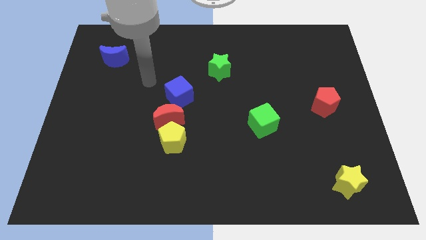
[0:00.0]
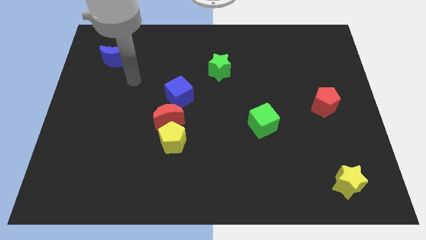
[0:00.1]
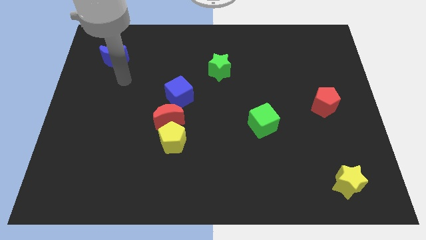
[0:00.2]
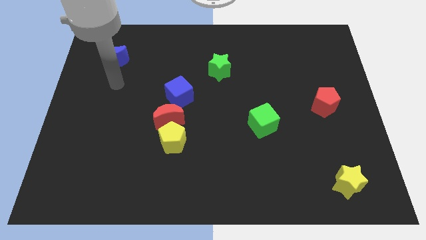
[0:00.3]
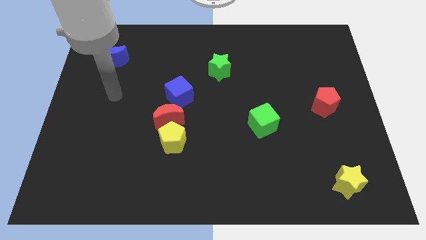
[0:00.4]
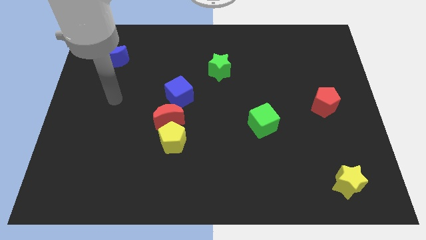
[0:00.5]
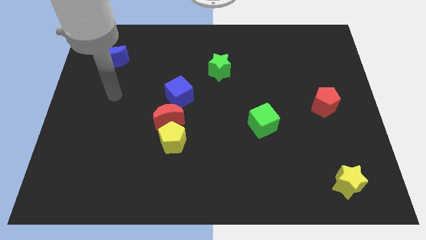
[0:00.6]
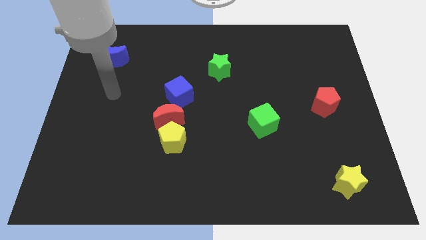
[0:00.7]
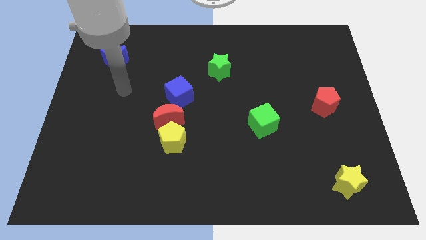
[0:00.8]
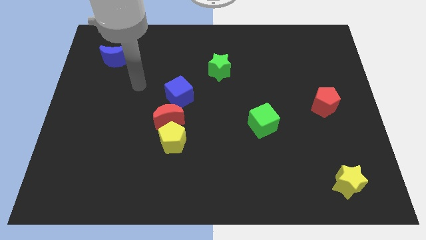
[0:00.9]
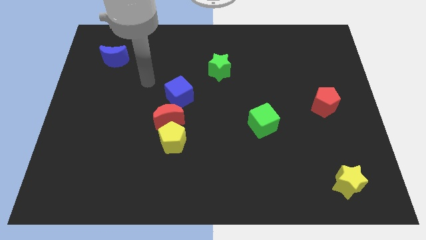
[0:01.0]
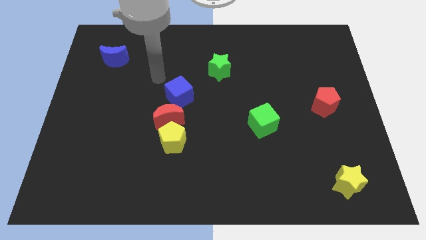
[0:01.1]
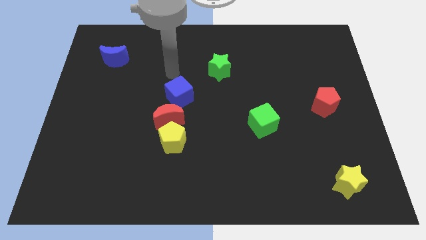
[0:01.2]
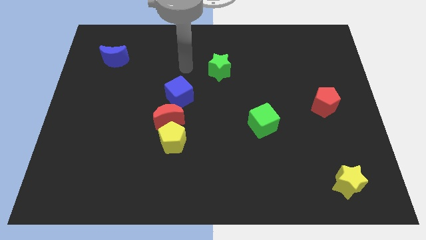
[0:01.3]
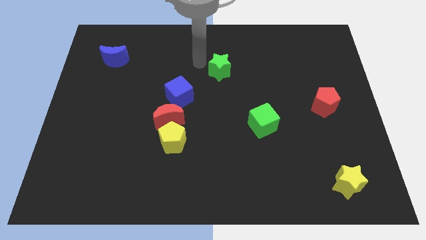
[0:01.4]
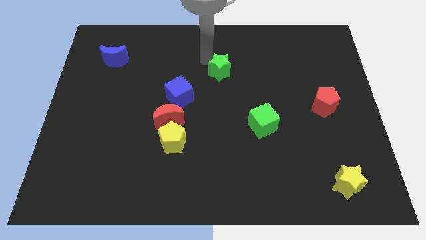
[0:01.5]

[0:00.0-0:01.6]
move your arm to the top left of green star

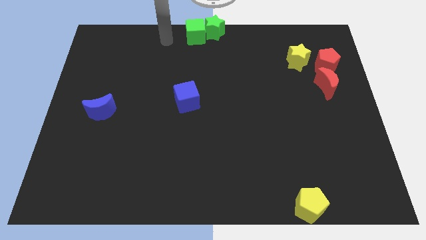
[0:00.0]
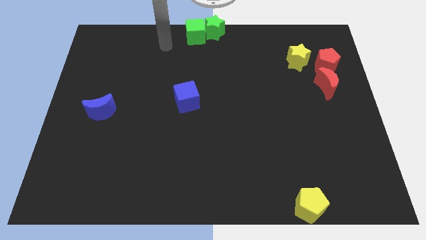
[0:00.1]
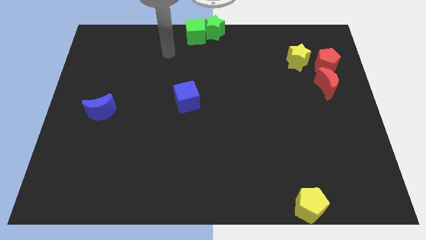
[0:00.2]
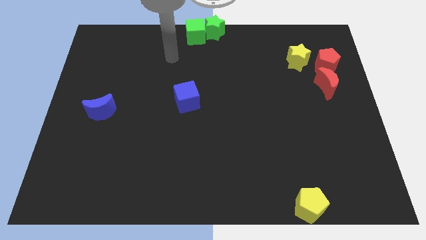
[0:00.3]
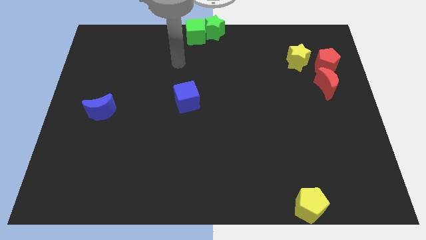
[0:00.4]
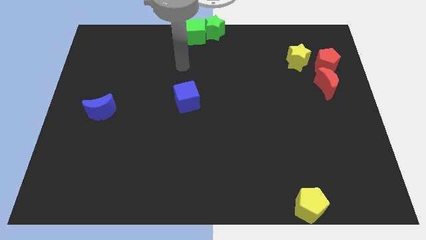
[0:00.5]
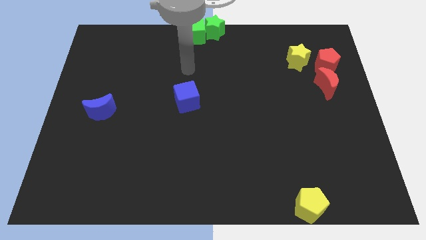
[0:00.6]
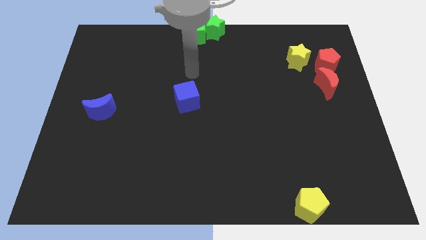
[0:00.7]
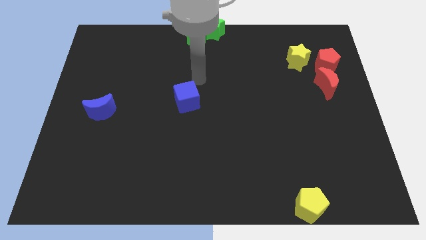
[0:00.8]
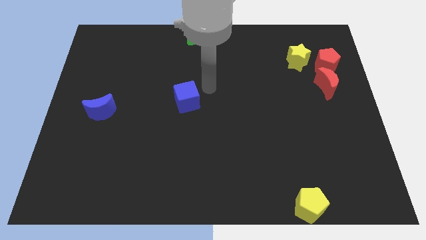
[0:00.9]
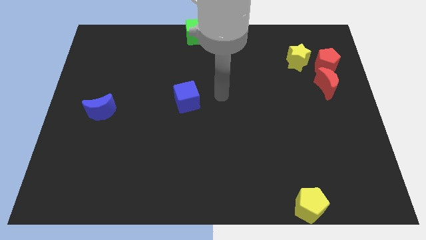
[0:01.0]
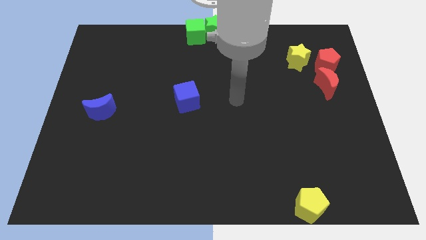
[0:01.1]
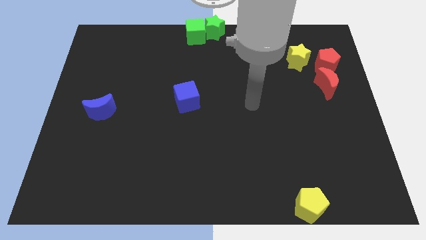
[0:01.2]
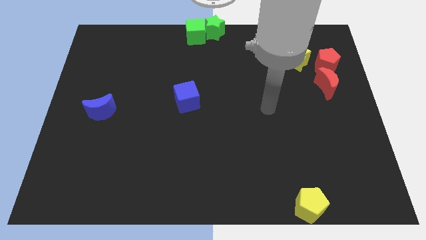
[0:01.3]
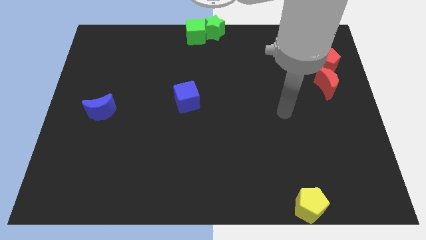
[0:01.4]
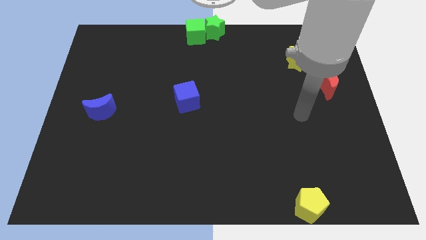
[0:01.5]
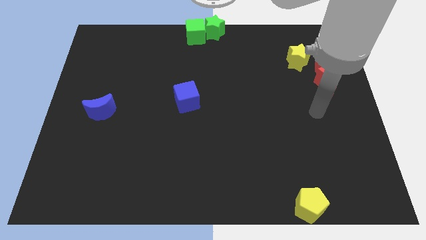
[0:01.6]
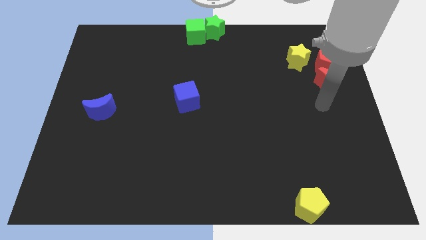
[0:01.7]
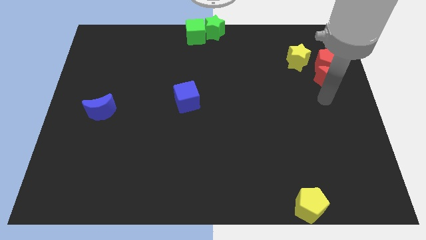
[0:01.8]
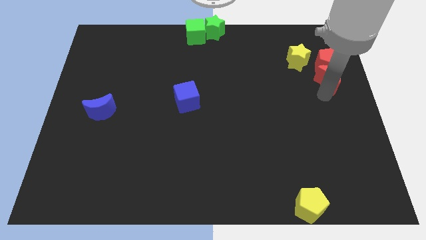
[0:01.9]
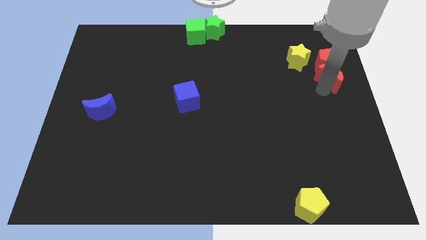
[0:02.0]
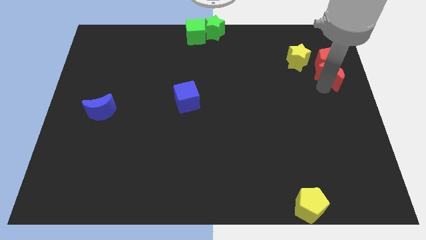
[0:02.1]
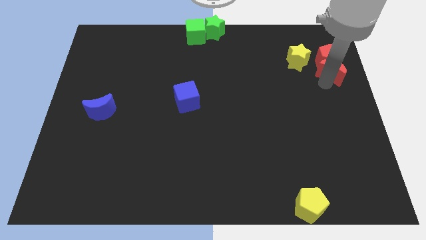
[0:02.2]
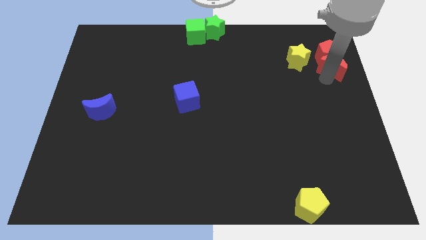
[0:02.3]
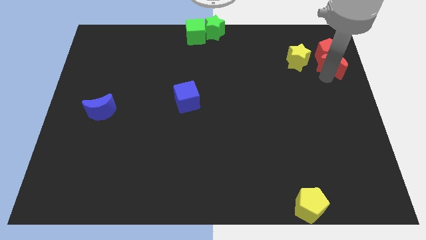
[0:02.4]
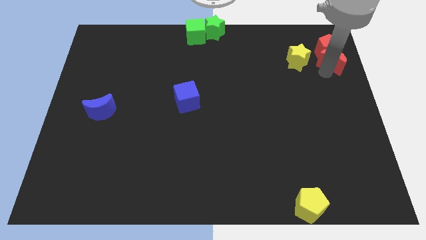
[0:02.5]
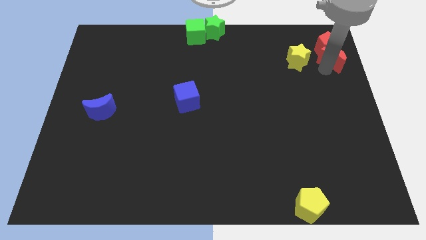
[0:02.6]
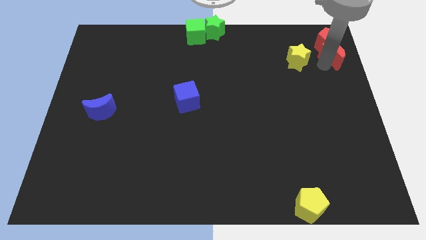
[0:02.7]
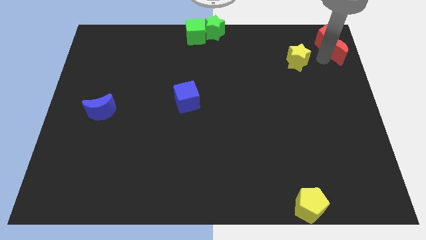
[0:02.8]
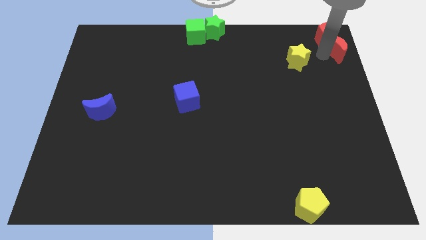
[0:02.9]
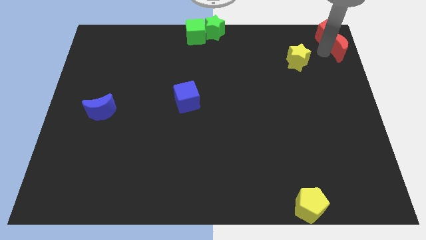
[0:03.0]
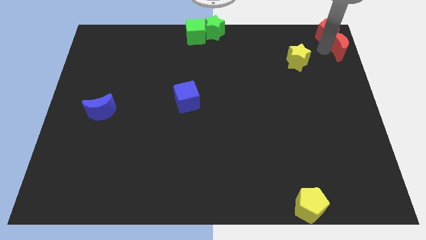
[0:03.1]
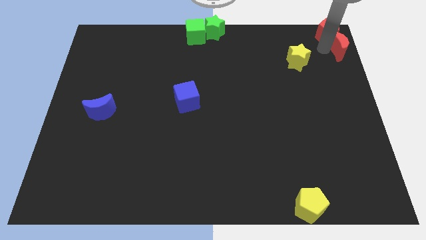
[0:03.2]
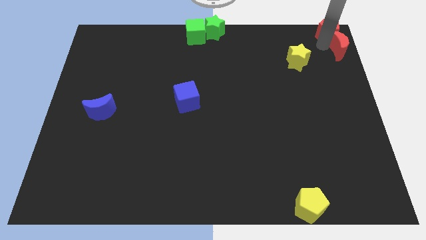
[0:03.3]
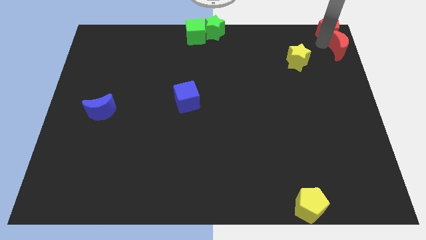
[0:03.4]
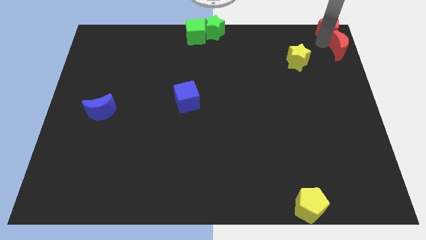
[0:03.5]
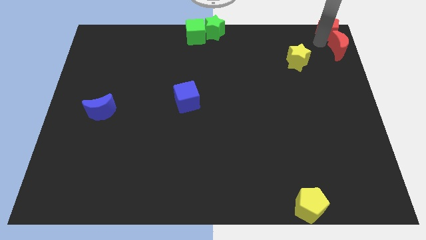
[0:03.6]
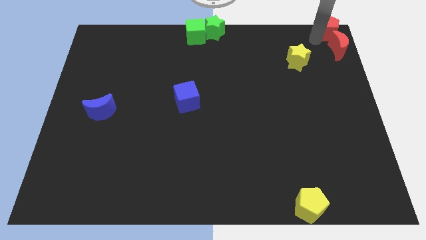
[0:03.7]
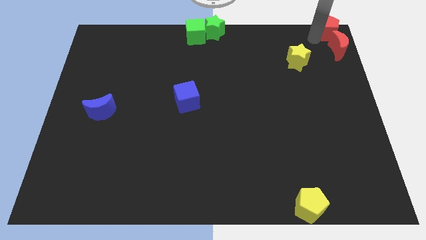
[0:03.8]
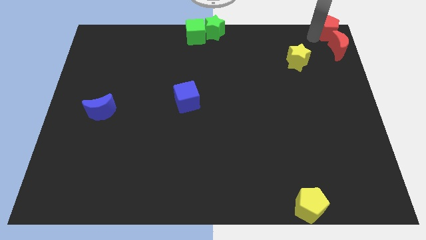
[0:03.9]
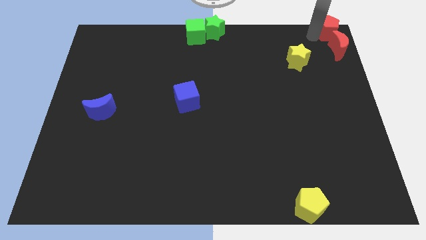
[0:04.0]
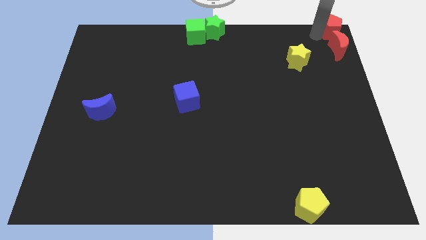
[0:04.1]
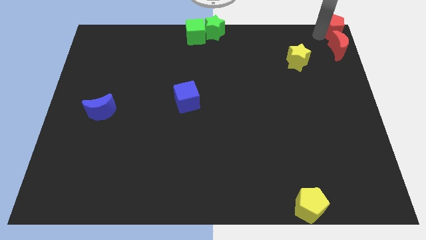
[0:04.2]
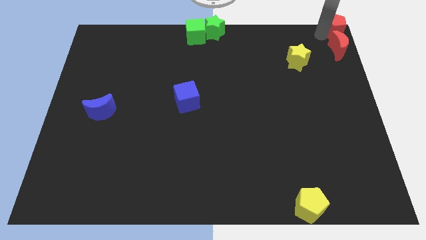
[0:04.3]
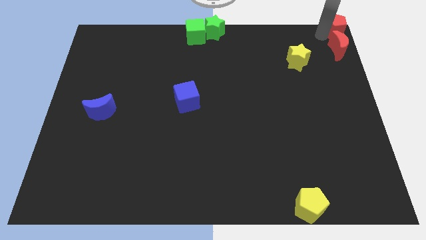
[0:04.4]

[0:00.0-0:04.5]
push red crescent and red pentagon to the top right corner of the board

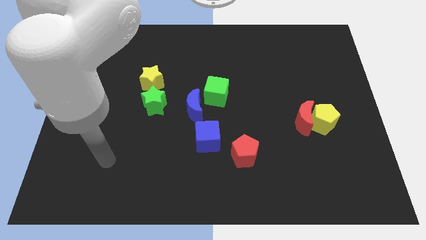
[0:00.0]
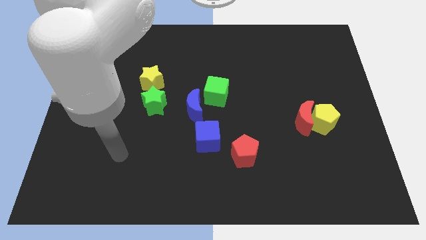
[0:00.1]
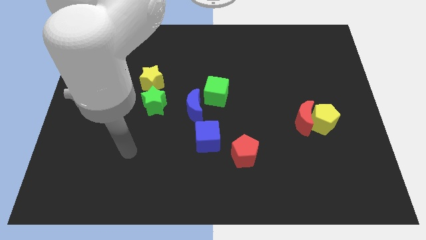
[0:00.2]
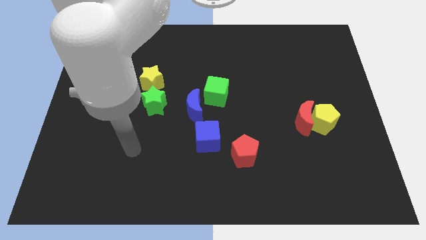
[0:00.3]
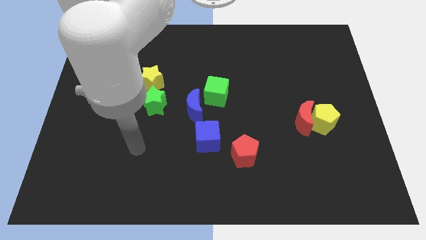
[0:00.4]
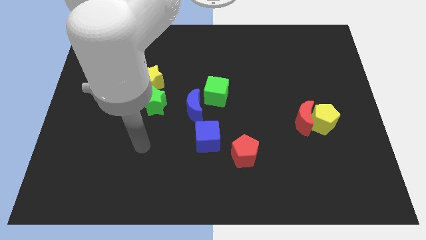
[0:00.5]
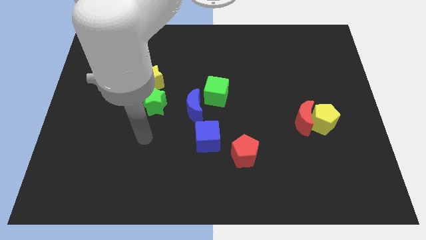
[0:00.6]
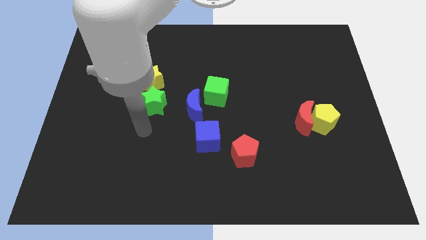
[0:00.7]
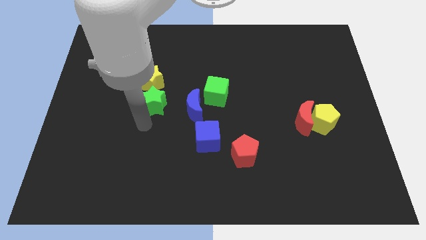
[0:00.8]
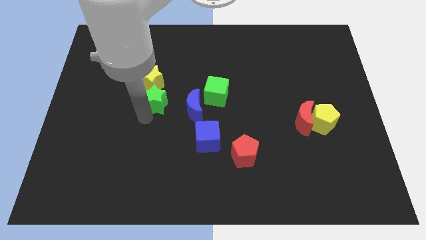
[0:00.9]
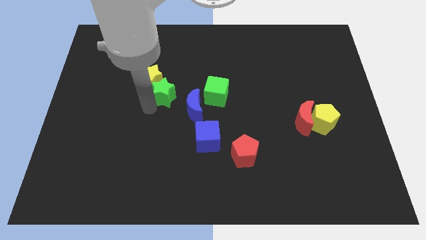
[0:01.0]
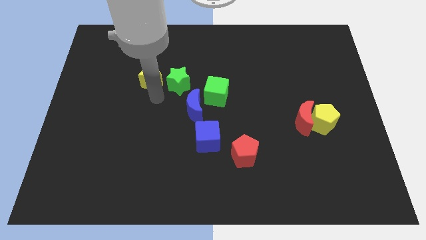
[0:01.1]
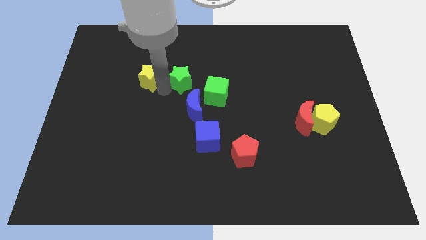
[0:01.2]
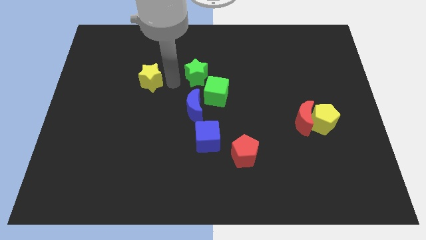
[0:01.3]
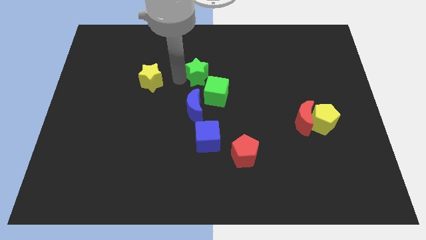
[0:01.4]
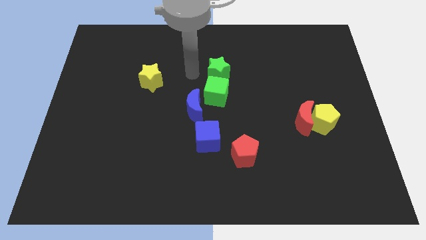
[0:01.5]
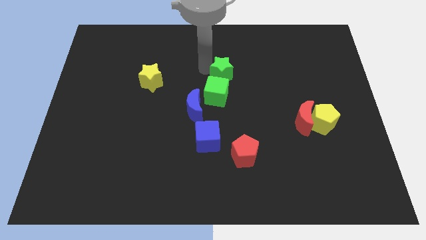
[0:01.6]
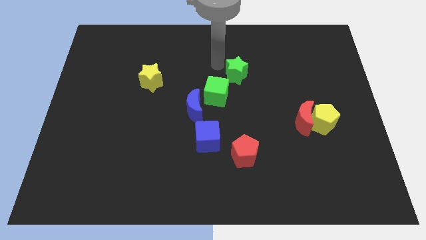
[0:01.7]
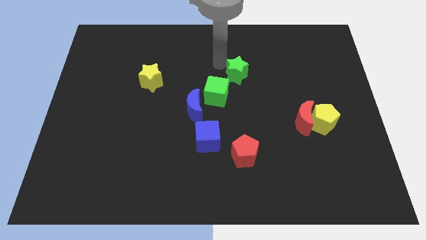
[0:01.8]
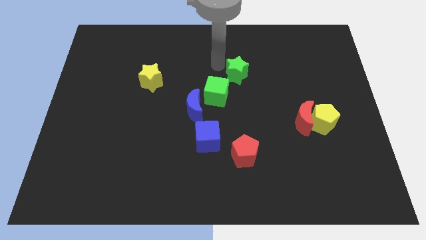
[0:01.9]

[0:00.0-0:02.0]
place the green star vertical above red pentagon

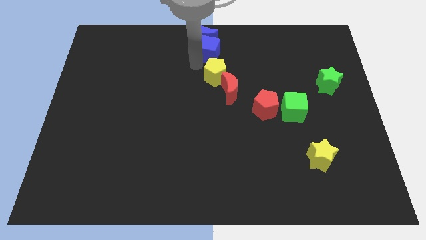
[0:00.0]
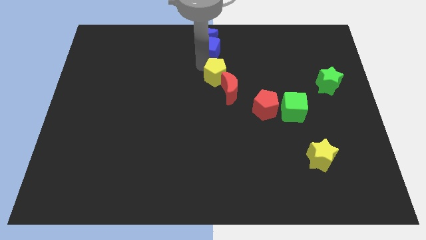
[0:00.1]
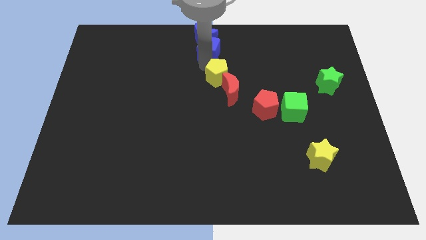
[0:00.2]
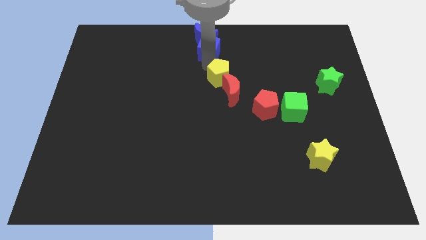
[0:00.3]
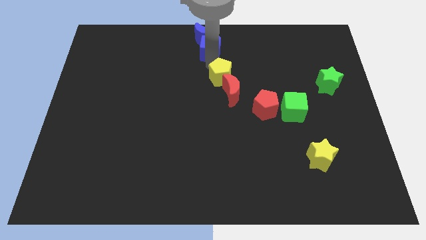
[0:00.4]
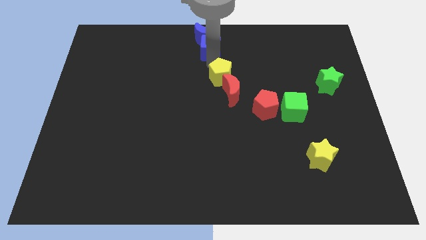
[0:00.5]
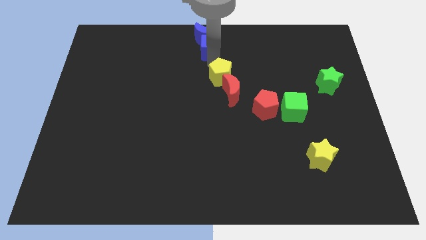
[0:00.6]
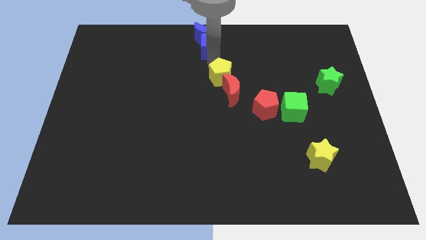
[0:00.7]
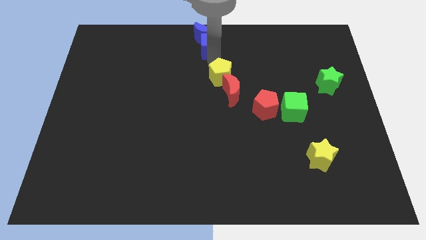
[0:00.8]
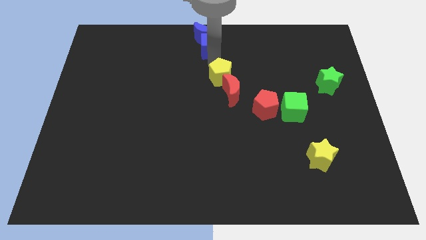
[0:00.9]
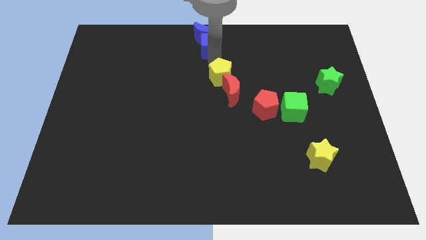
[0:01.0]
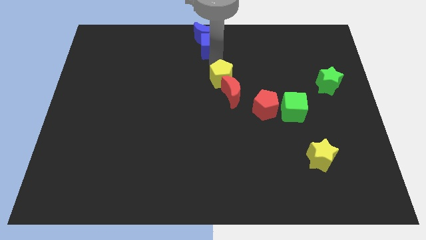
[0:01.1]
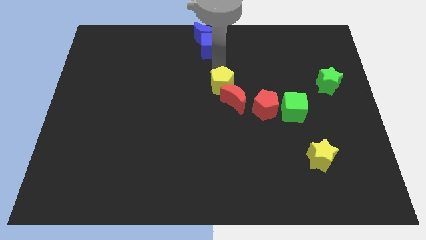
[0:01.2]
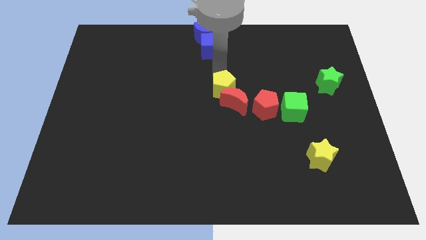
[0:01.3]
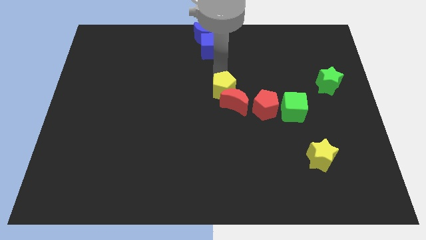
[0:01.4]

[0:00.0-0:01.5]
push the yellow pentagon into the red crescent
